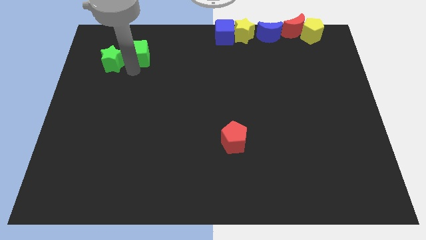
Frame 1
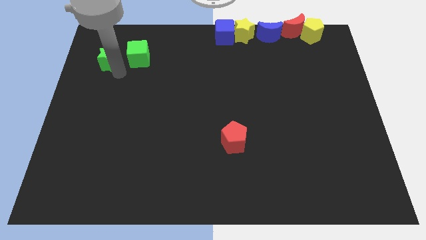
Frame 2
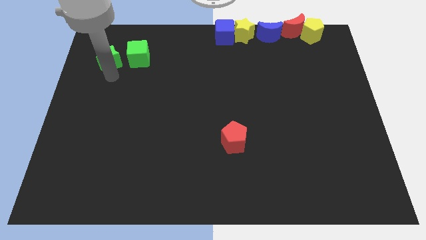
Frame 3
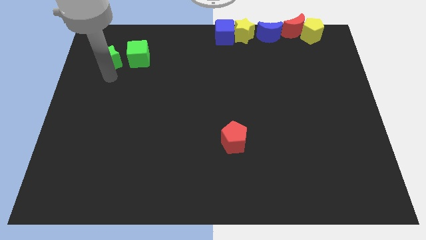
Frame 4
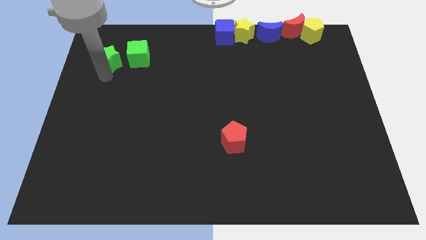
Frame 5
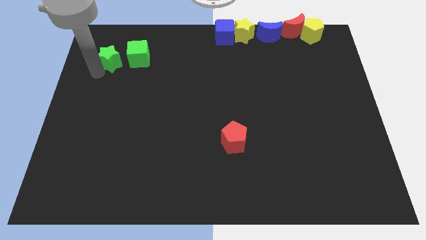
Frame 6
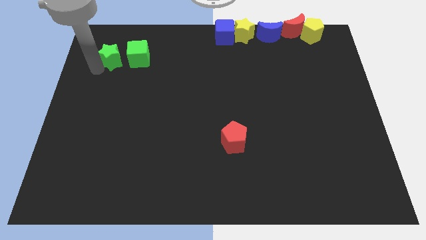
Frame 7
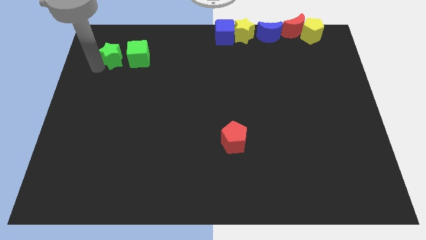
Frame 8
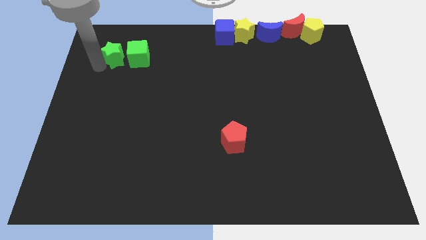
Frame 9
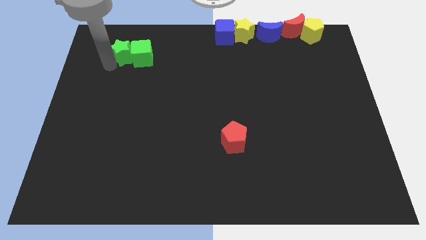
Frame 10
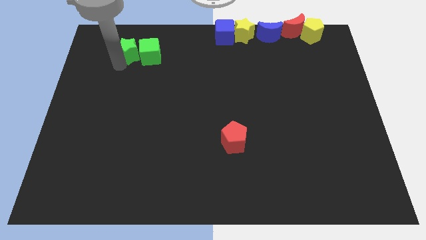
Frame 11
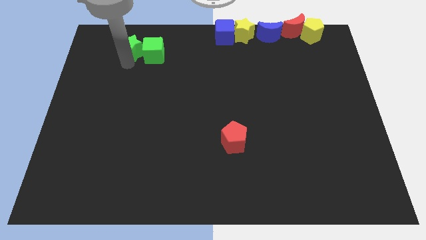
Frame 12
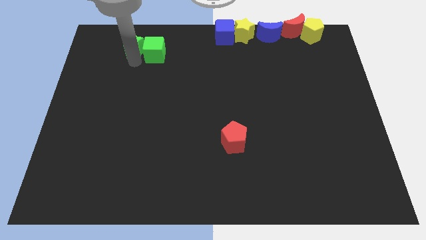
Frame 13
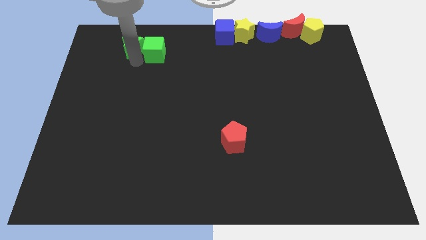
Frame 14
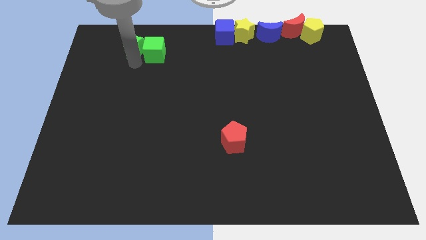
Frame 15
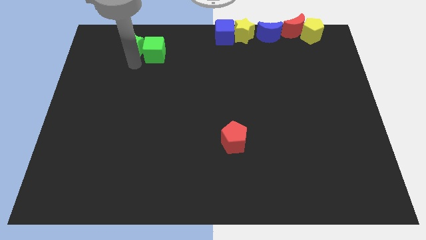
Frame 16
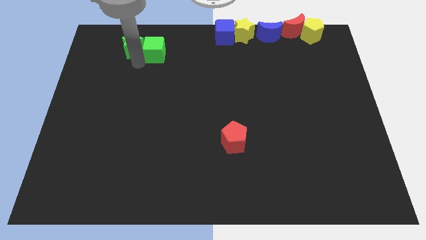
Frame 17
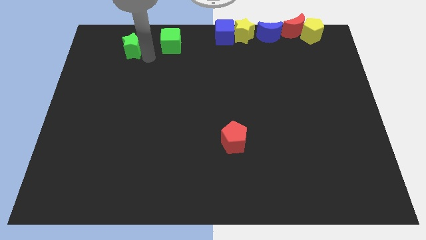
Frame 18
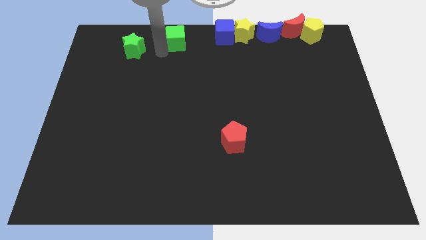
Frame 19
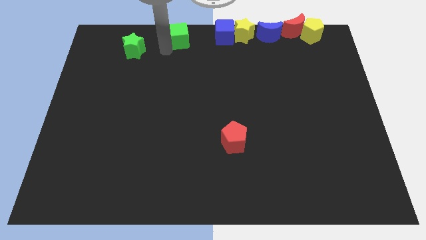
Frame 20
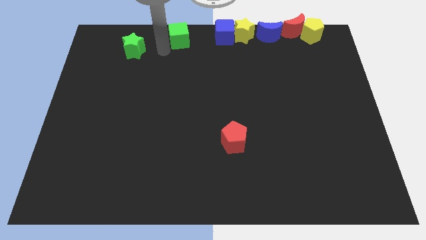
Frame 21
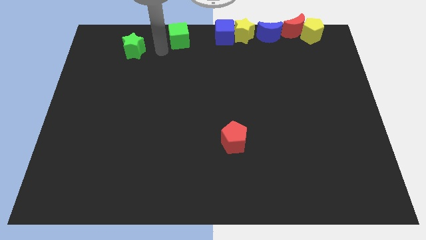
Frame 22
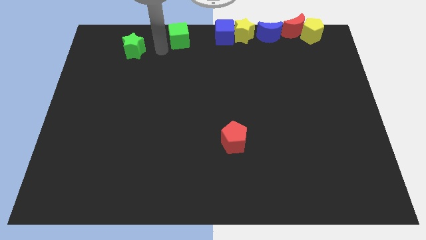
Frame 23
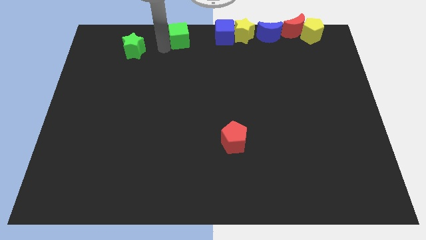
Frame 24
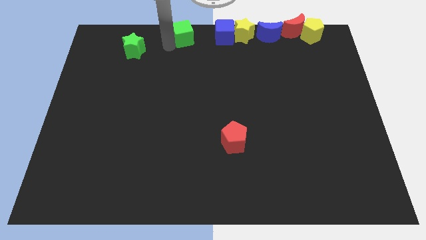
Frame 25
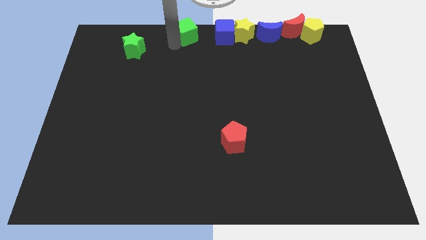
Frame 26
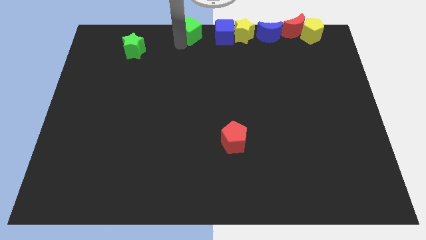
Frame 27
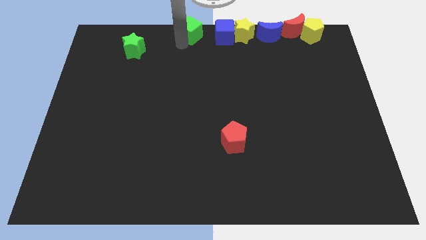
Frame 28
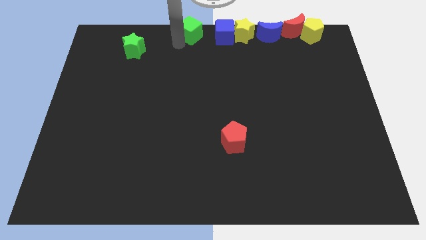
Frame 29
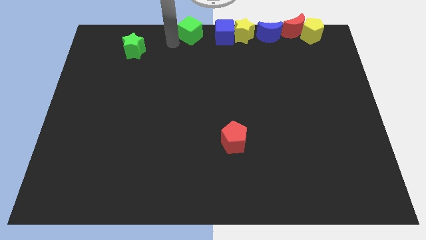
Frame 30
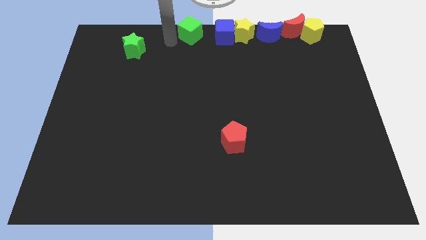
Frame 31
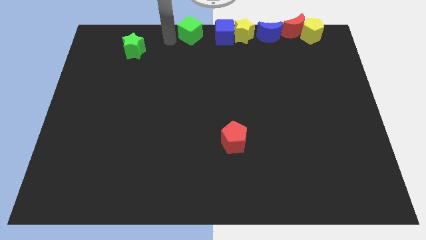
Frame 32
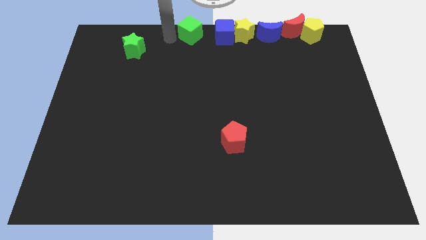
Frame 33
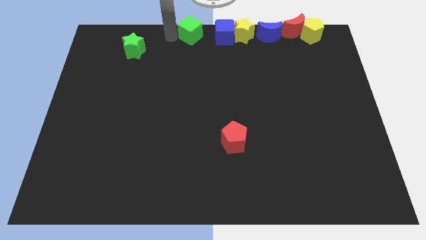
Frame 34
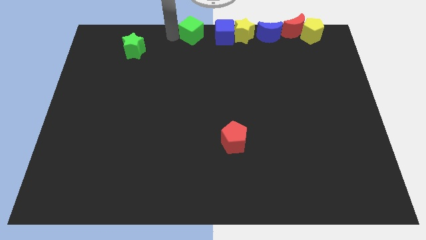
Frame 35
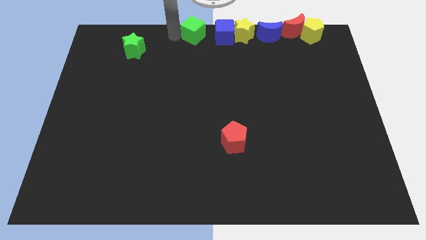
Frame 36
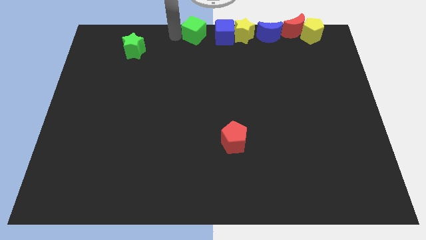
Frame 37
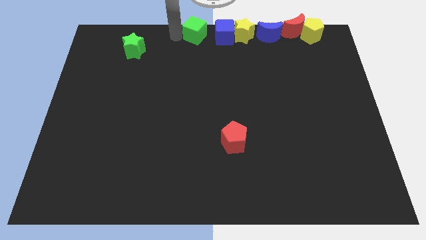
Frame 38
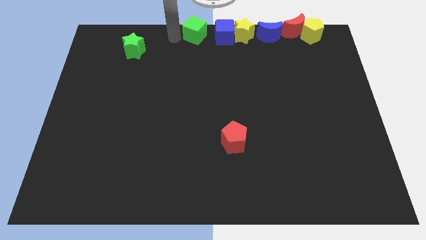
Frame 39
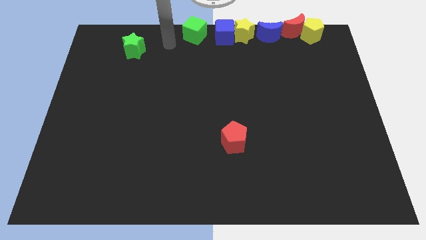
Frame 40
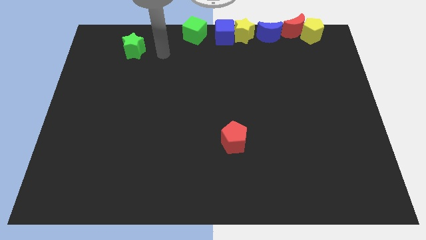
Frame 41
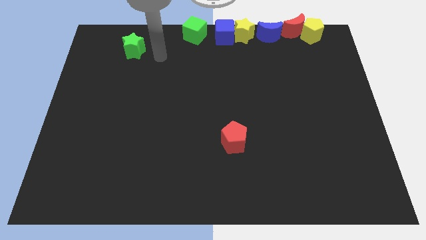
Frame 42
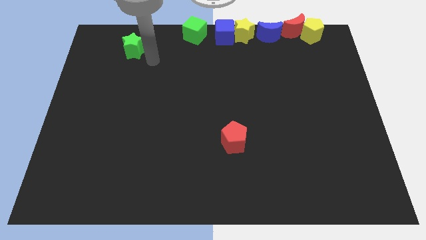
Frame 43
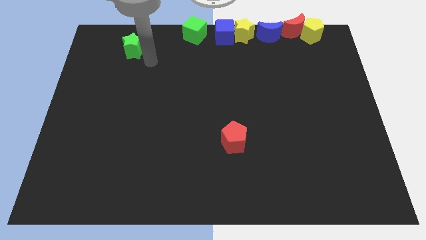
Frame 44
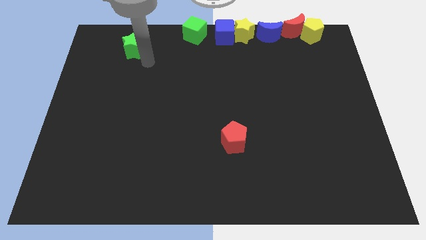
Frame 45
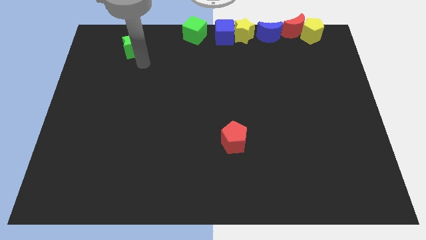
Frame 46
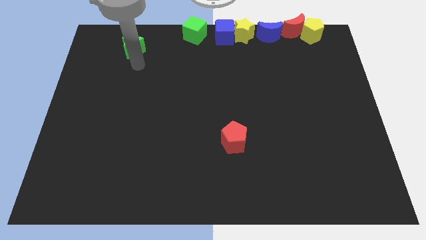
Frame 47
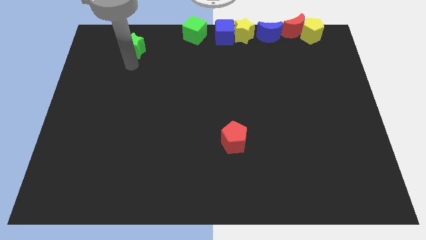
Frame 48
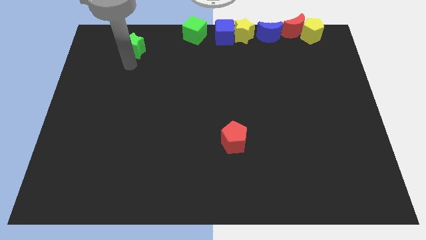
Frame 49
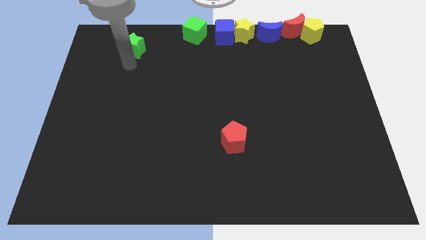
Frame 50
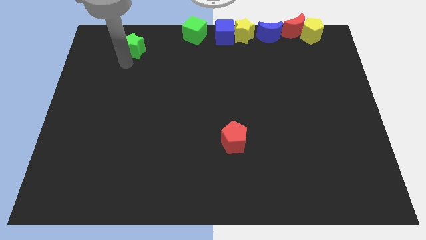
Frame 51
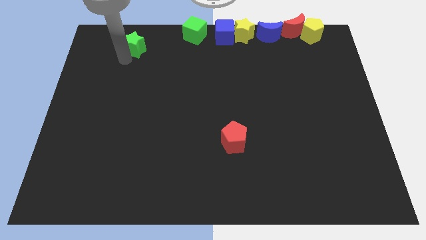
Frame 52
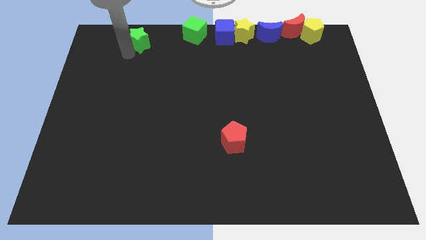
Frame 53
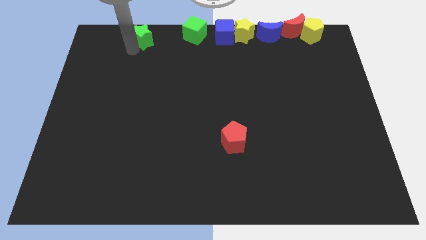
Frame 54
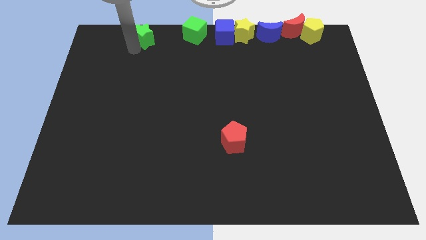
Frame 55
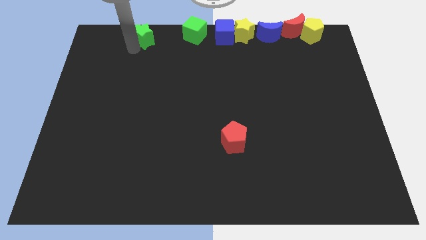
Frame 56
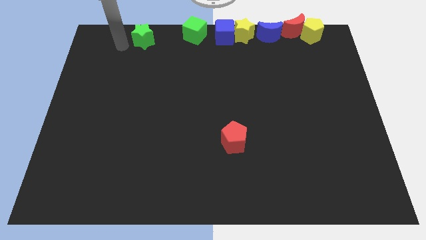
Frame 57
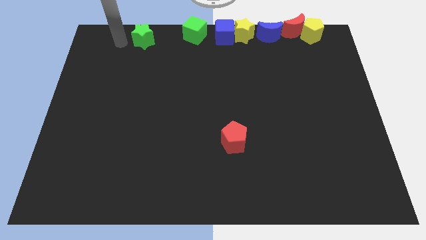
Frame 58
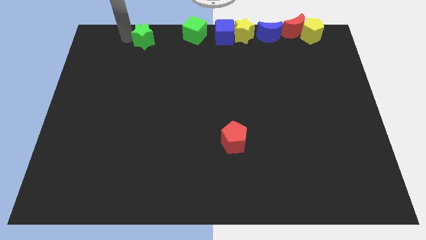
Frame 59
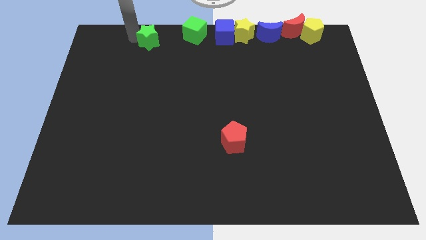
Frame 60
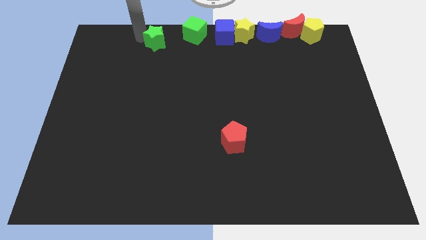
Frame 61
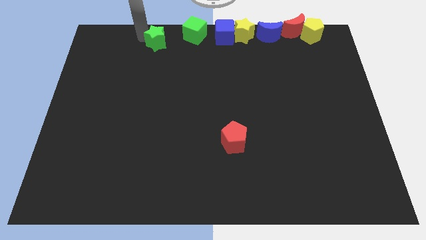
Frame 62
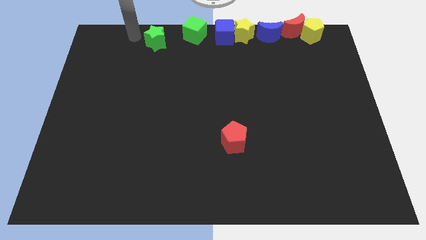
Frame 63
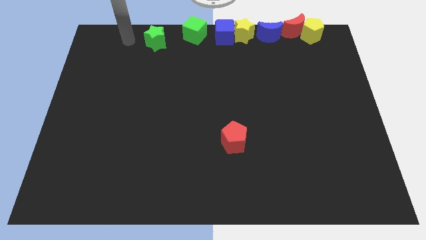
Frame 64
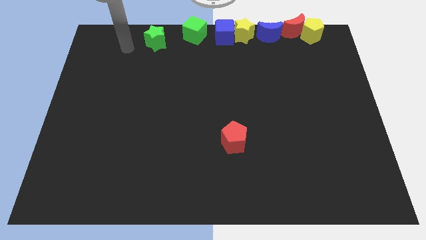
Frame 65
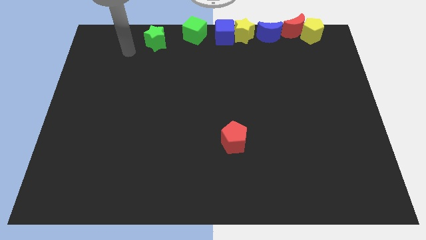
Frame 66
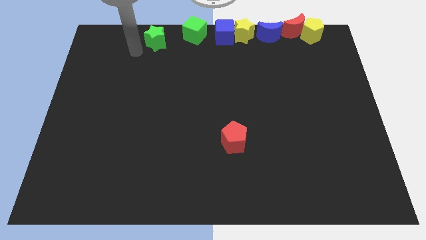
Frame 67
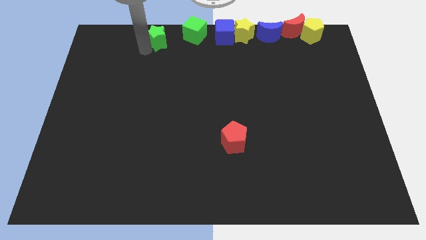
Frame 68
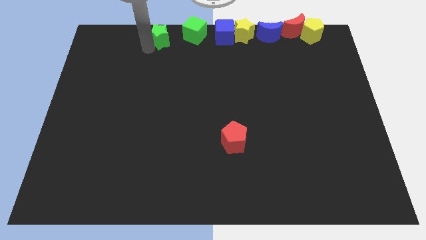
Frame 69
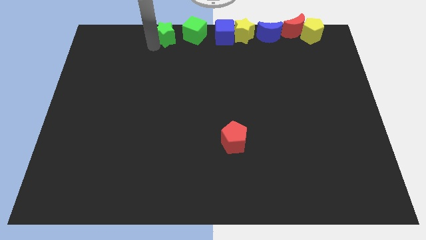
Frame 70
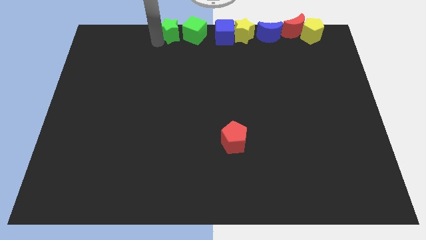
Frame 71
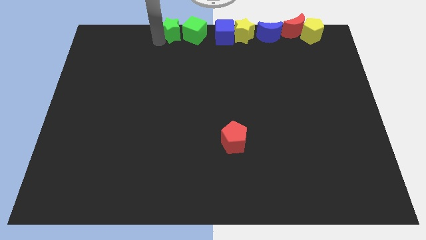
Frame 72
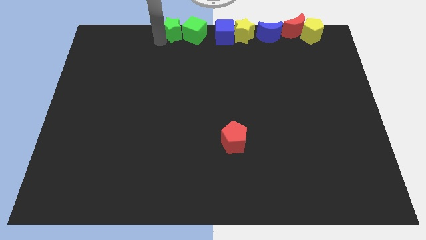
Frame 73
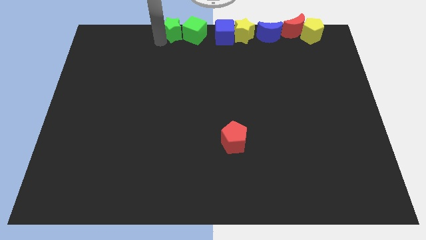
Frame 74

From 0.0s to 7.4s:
move green cube and green star to the left of the blue cube

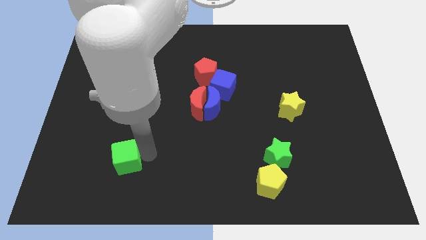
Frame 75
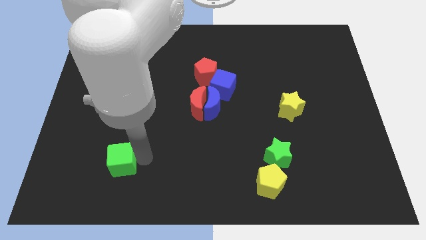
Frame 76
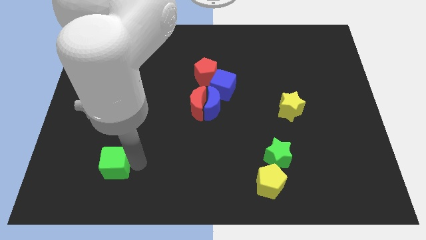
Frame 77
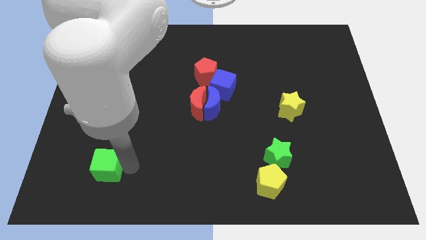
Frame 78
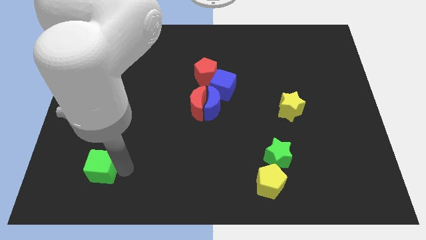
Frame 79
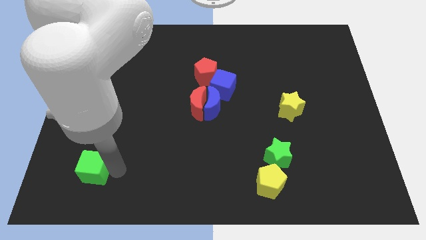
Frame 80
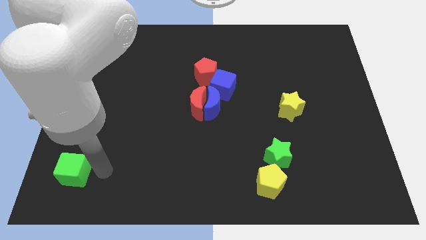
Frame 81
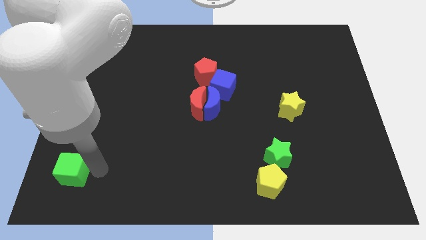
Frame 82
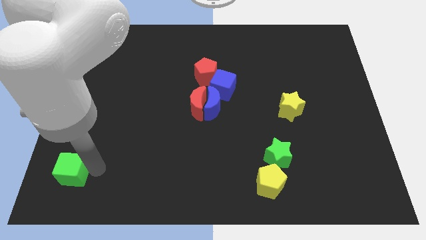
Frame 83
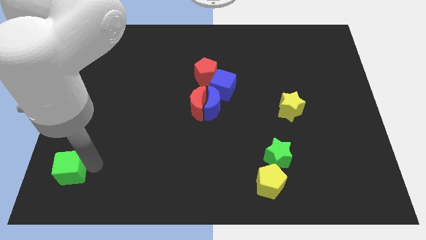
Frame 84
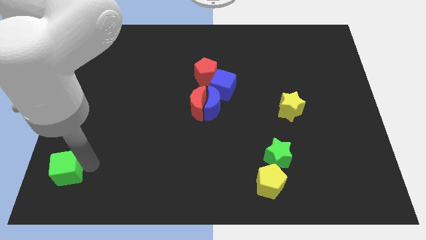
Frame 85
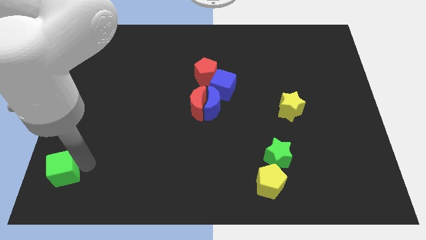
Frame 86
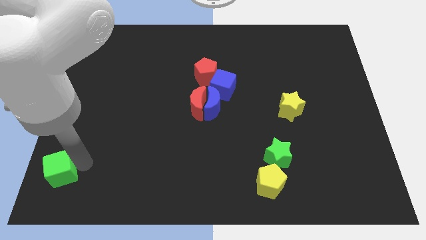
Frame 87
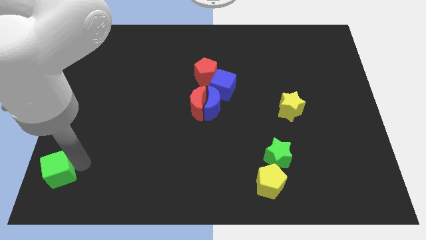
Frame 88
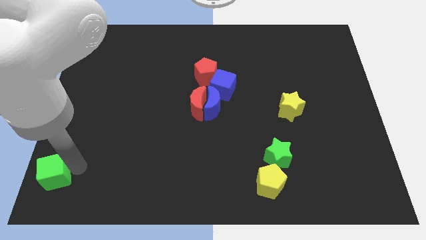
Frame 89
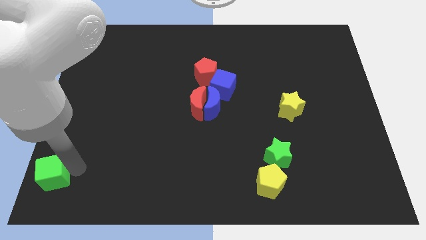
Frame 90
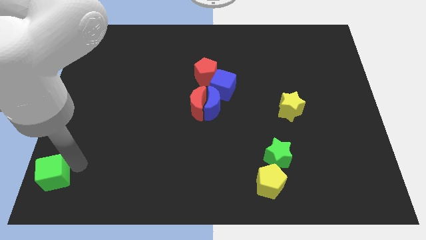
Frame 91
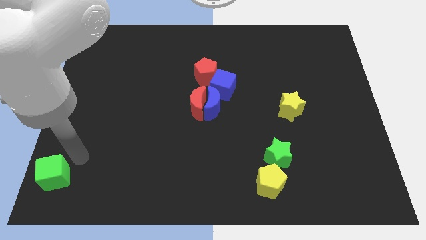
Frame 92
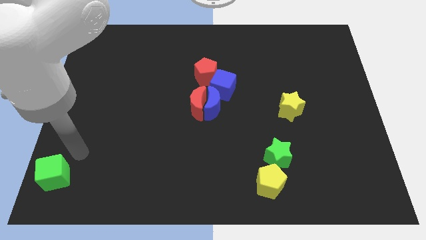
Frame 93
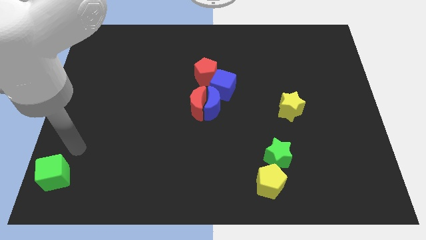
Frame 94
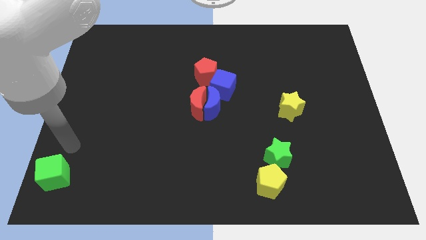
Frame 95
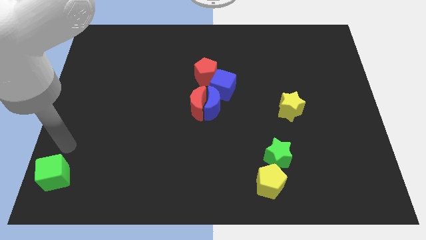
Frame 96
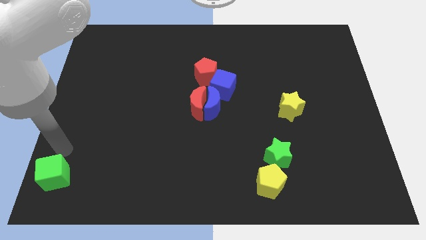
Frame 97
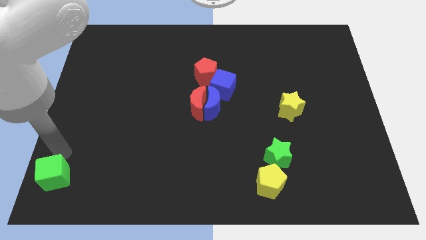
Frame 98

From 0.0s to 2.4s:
move the green cube to the bottom left corner
